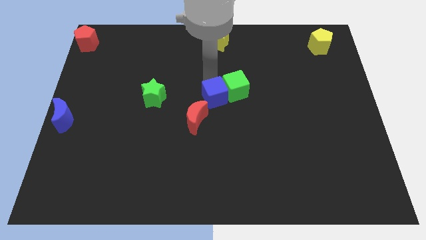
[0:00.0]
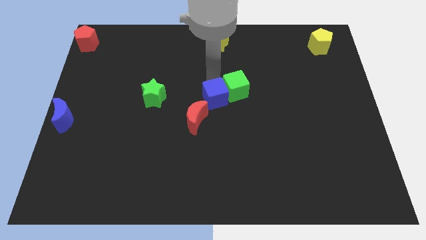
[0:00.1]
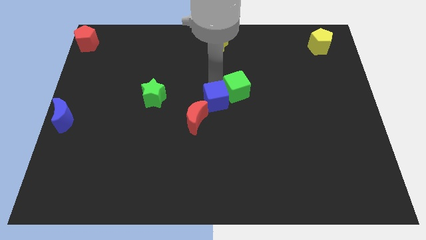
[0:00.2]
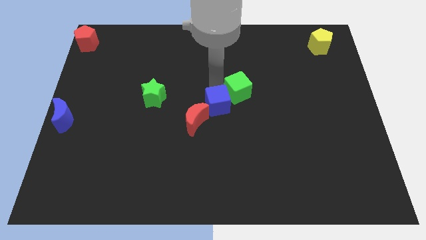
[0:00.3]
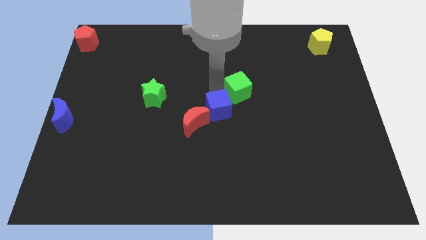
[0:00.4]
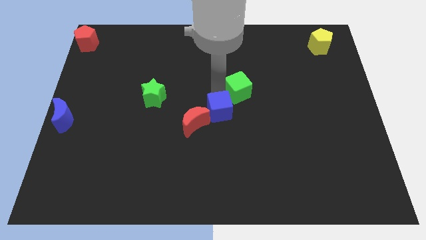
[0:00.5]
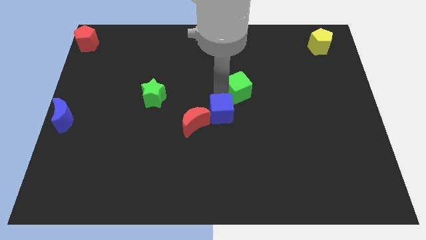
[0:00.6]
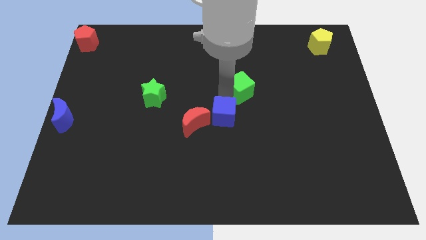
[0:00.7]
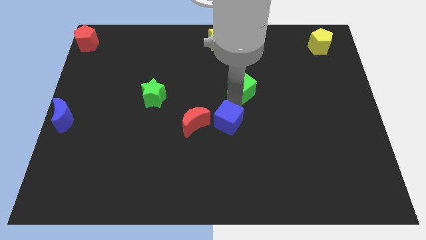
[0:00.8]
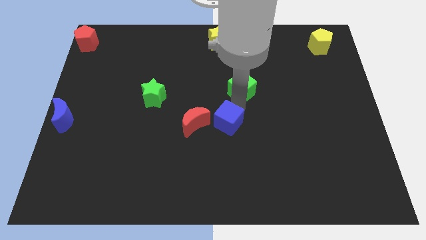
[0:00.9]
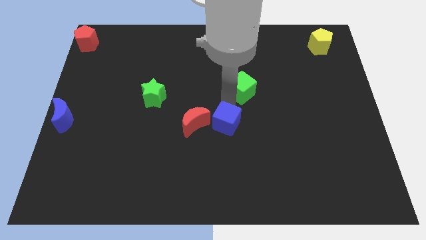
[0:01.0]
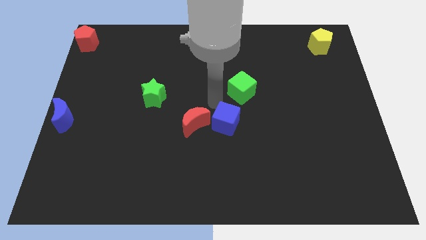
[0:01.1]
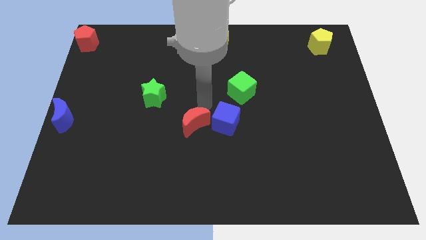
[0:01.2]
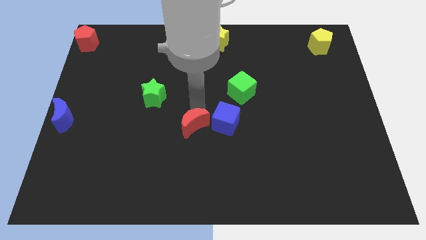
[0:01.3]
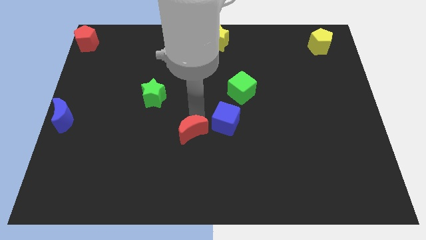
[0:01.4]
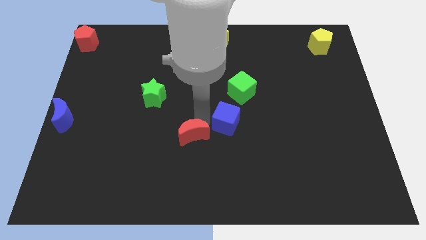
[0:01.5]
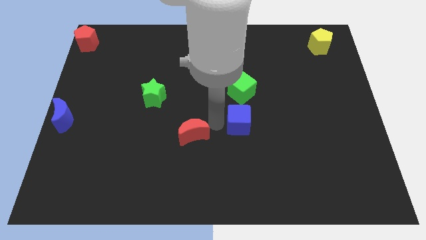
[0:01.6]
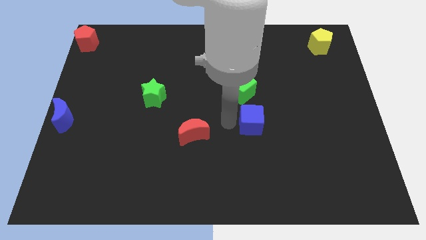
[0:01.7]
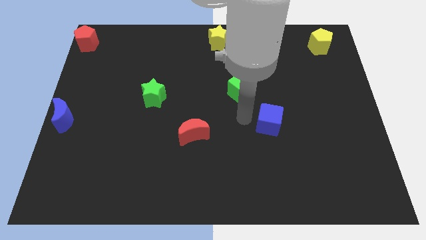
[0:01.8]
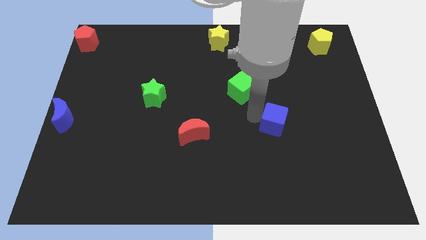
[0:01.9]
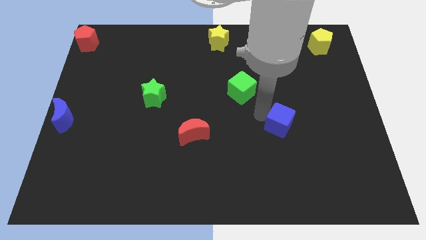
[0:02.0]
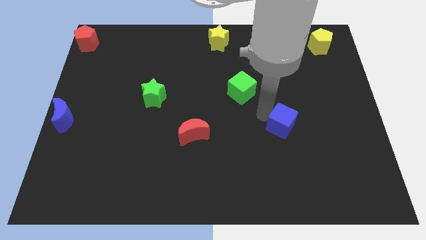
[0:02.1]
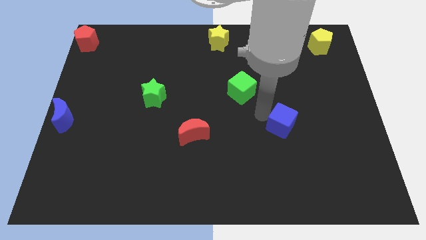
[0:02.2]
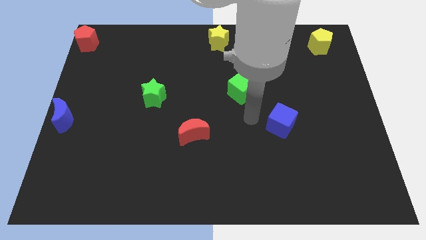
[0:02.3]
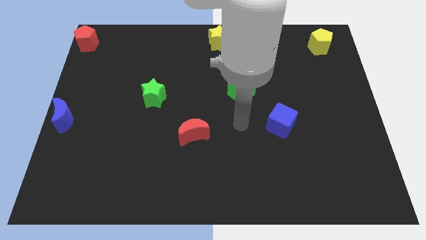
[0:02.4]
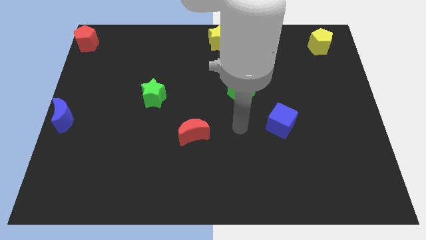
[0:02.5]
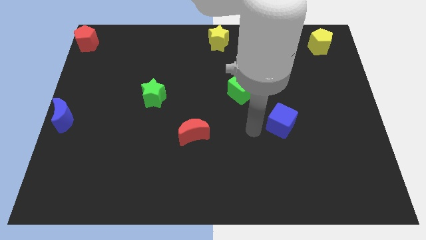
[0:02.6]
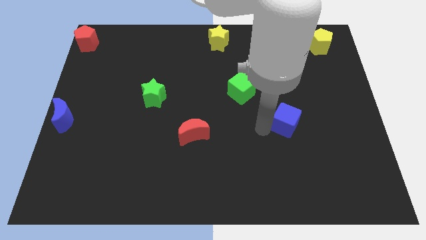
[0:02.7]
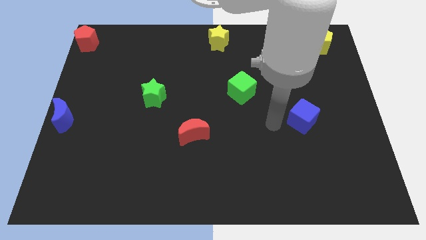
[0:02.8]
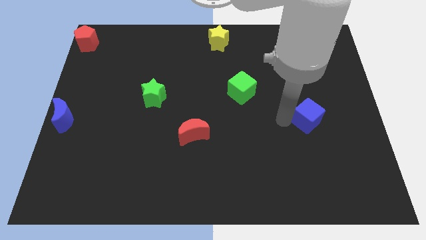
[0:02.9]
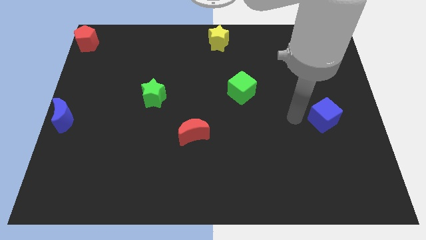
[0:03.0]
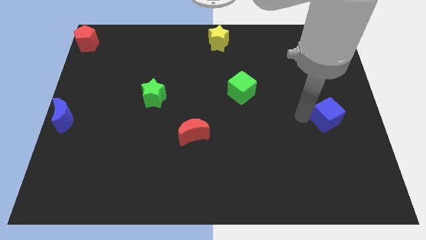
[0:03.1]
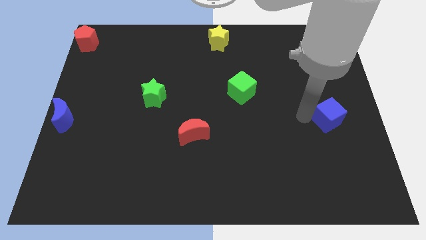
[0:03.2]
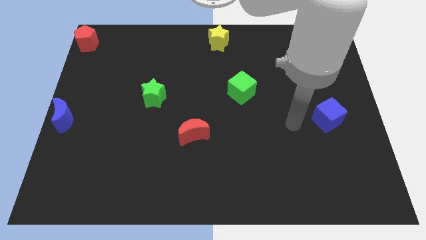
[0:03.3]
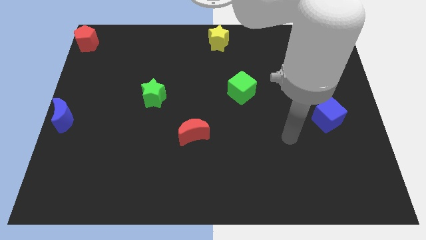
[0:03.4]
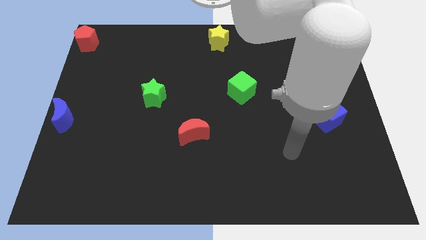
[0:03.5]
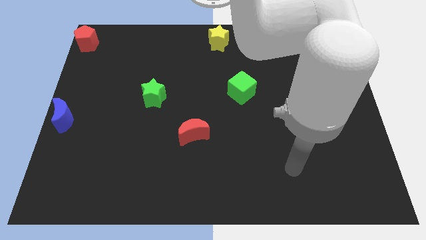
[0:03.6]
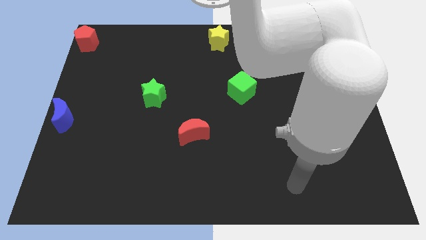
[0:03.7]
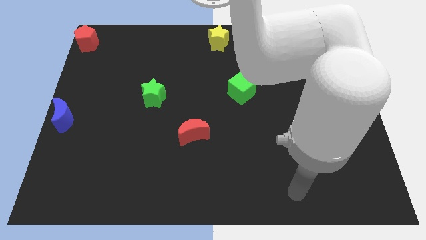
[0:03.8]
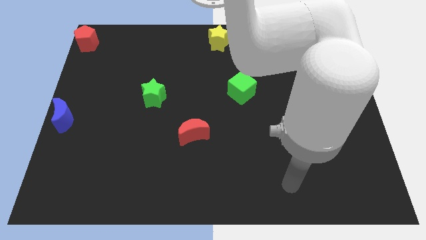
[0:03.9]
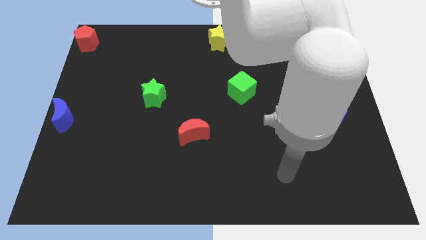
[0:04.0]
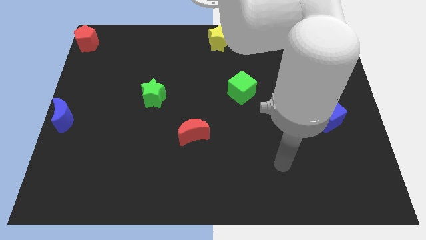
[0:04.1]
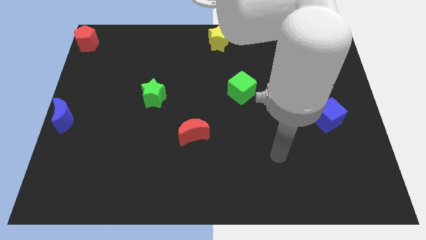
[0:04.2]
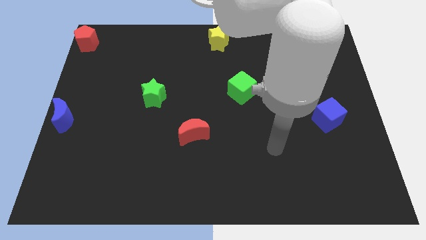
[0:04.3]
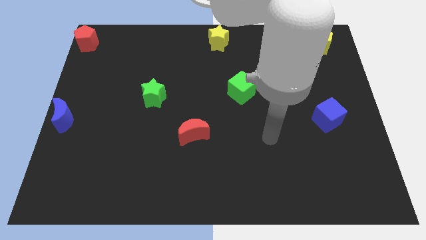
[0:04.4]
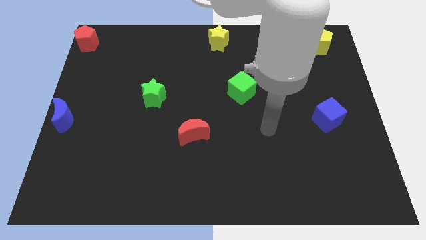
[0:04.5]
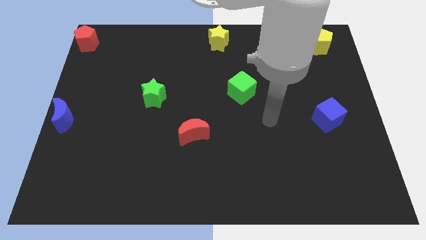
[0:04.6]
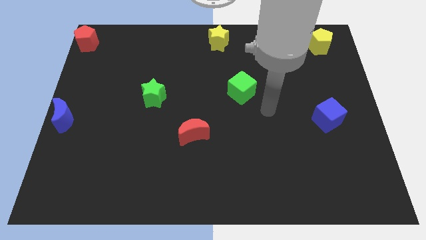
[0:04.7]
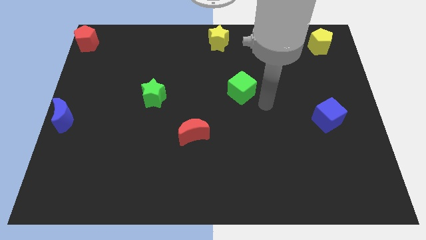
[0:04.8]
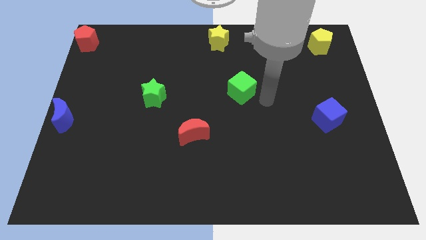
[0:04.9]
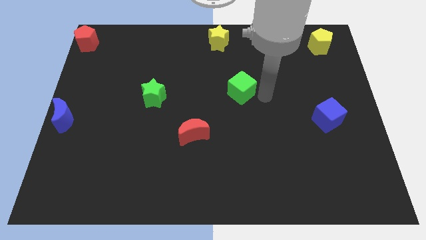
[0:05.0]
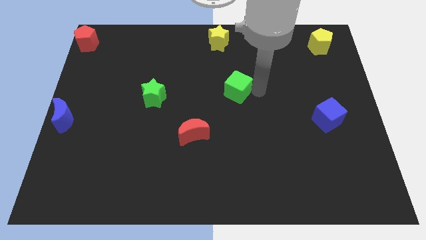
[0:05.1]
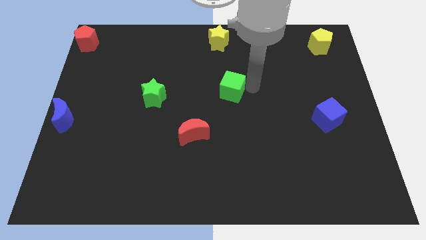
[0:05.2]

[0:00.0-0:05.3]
separate the blue cube from the green cube and red moon

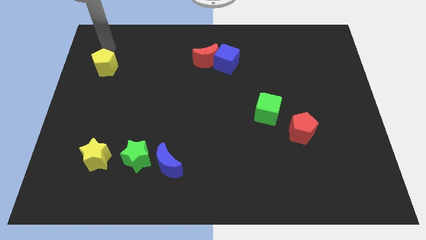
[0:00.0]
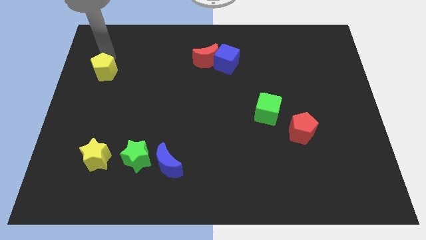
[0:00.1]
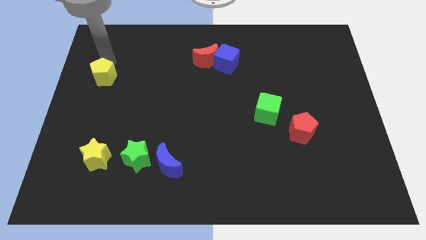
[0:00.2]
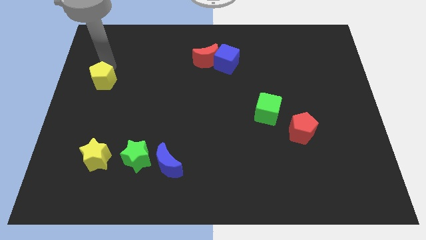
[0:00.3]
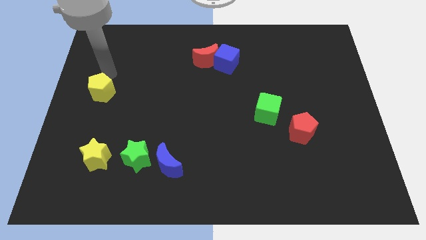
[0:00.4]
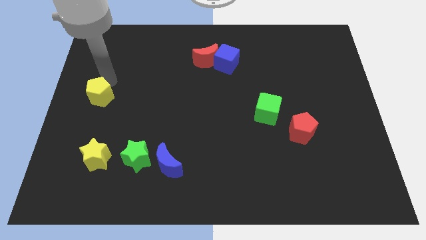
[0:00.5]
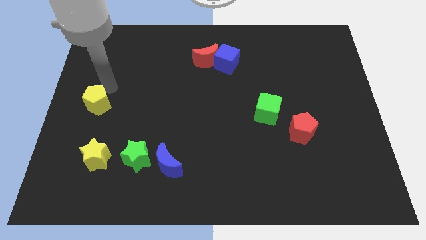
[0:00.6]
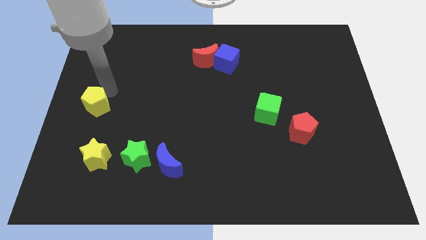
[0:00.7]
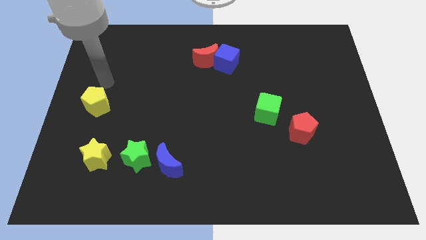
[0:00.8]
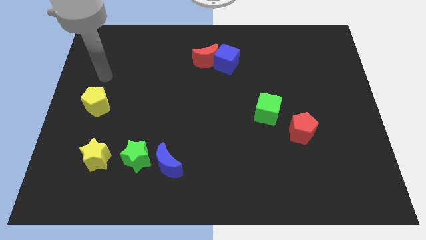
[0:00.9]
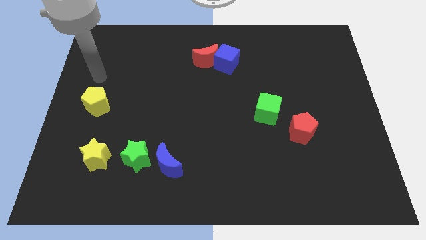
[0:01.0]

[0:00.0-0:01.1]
push the yellow pentagon towards yellow star

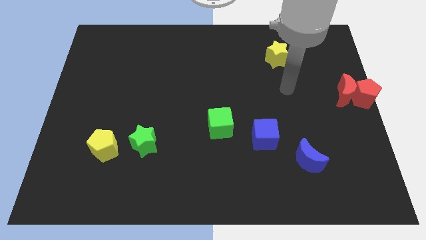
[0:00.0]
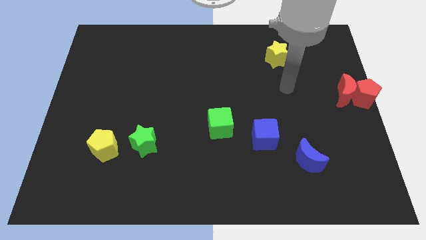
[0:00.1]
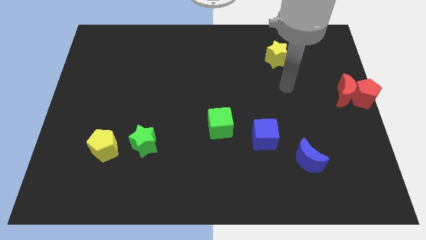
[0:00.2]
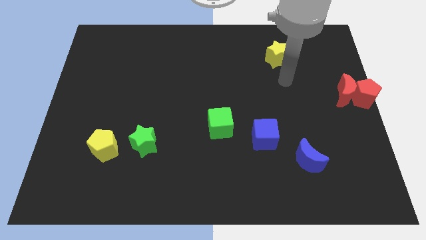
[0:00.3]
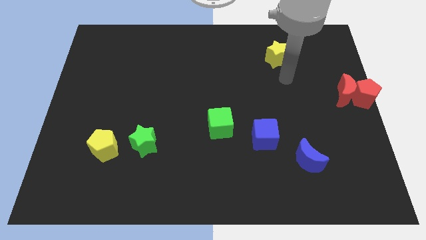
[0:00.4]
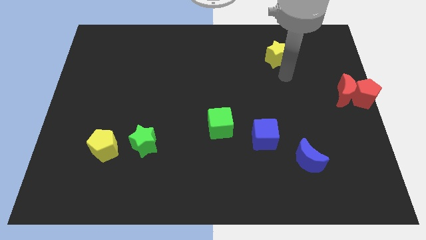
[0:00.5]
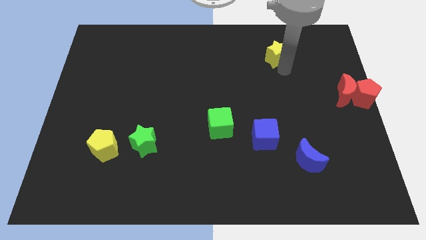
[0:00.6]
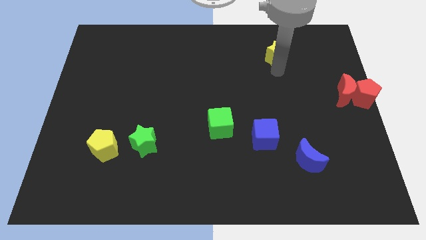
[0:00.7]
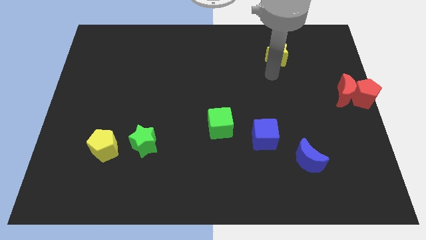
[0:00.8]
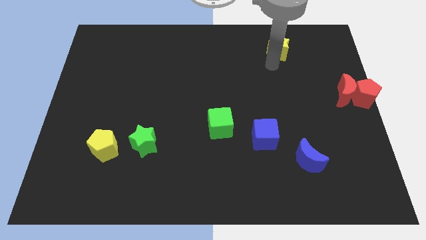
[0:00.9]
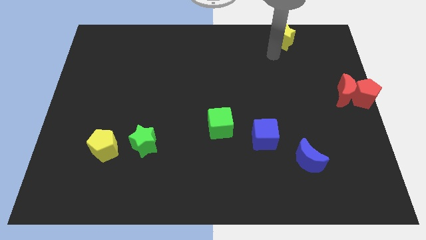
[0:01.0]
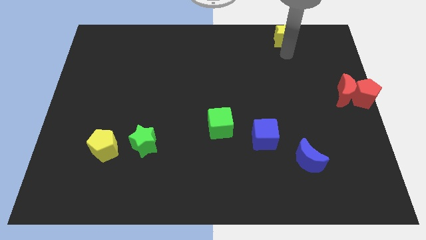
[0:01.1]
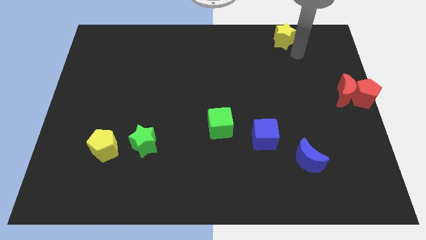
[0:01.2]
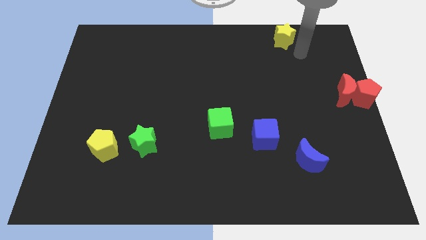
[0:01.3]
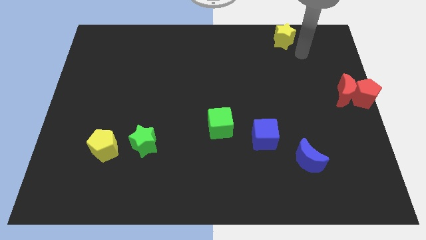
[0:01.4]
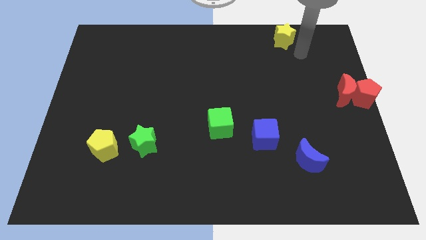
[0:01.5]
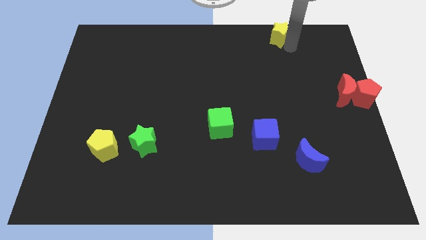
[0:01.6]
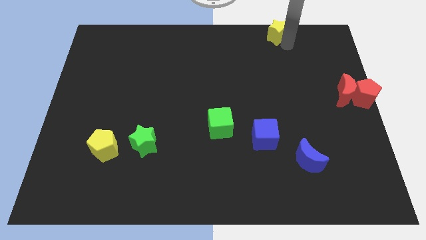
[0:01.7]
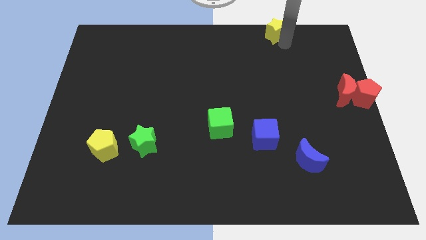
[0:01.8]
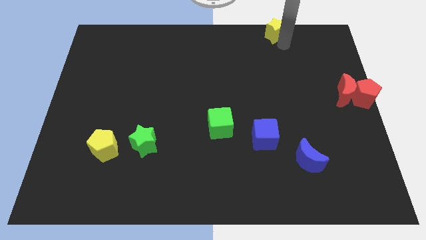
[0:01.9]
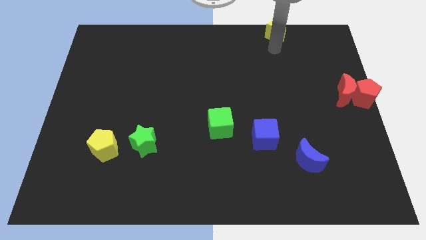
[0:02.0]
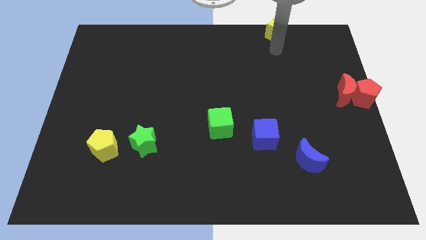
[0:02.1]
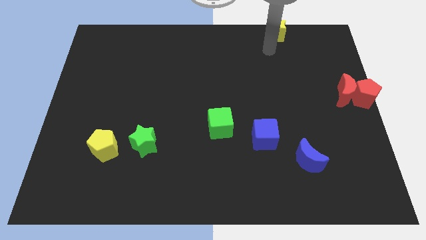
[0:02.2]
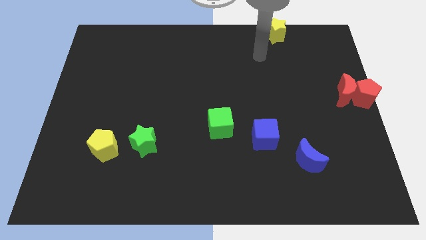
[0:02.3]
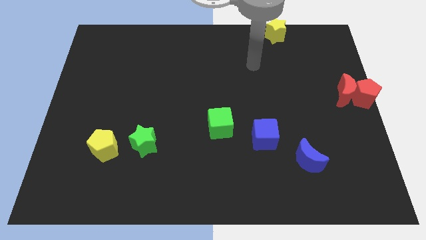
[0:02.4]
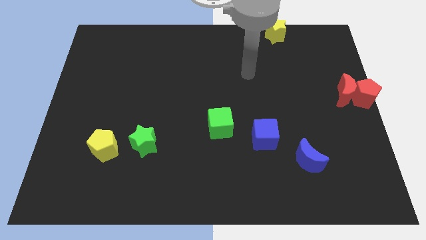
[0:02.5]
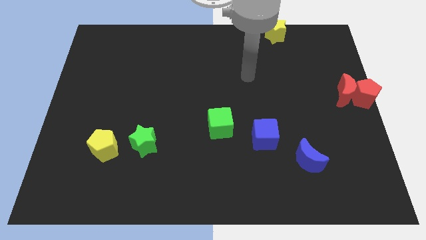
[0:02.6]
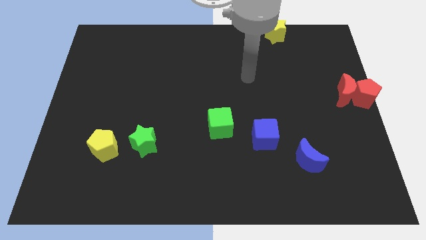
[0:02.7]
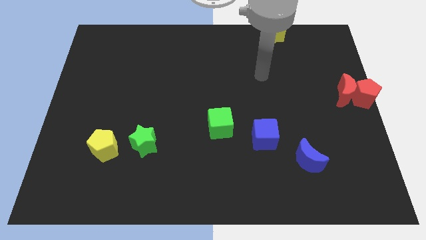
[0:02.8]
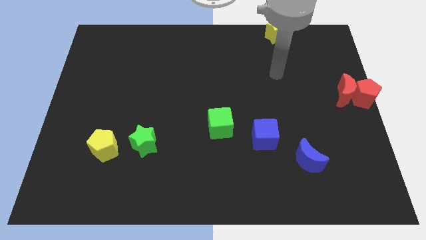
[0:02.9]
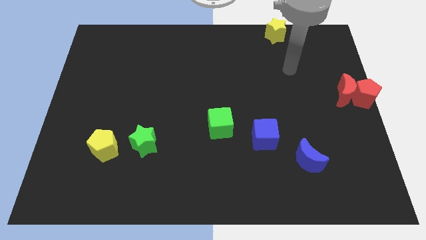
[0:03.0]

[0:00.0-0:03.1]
move yellow star slightly to the top
